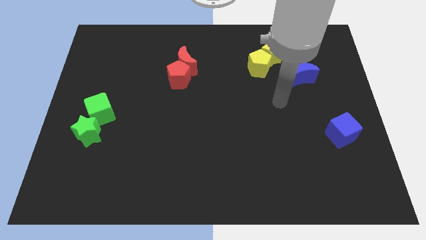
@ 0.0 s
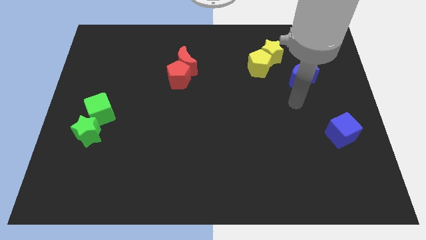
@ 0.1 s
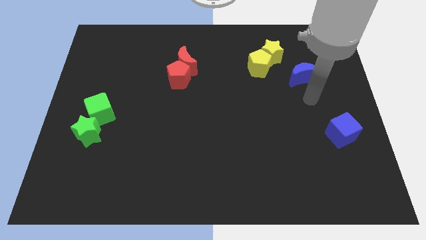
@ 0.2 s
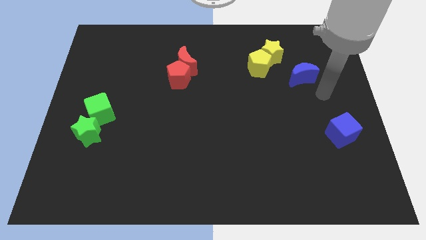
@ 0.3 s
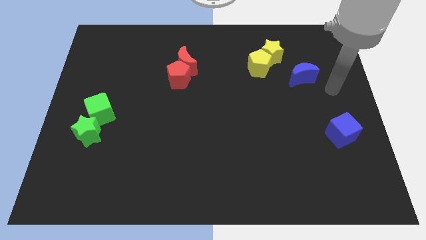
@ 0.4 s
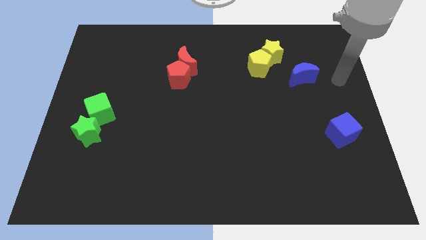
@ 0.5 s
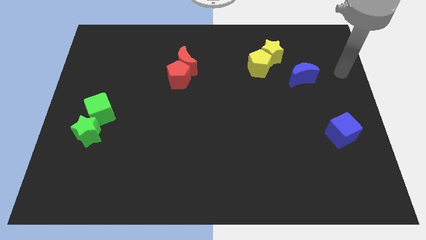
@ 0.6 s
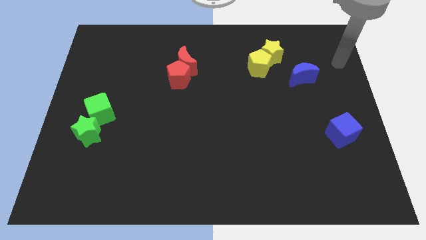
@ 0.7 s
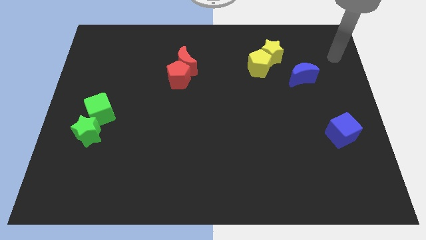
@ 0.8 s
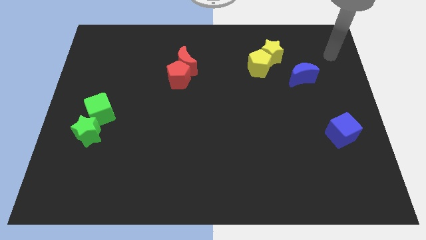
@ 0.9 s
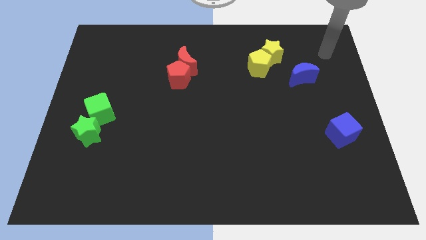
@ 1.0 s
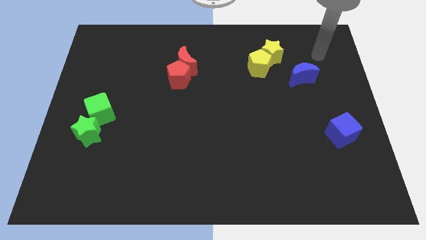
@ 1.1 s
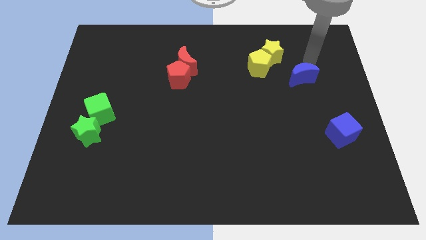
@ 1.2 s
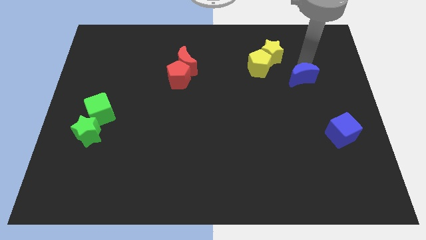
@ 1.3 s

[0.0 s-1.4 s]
move your arm close to the blue moon

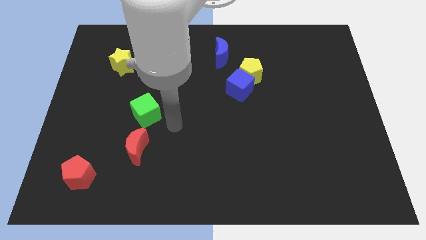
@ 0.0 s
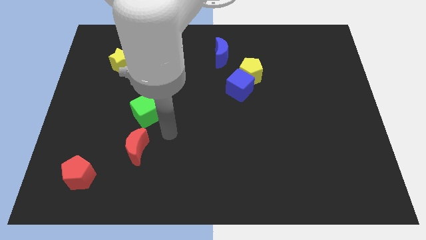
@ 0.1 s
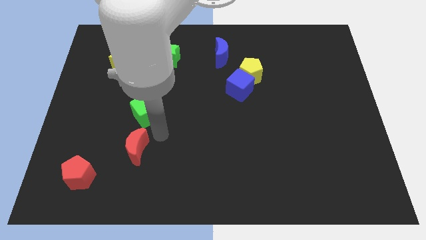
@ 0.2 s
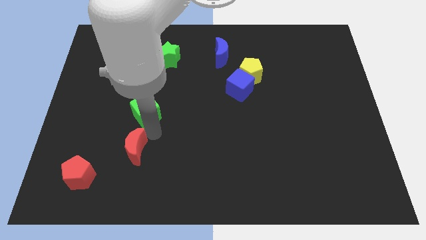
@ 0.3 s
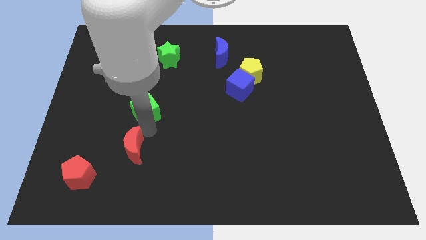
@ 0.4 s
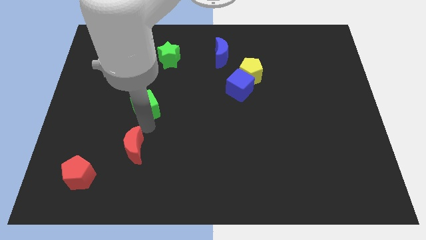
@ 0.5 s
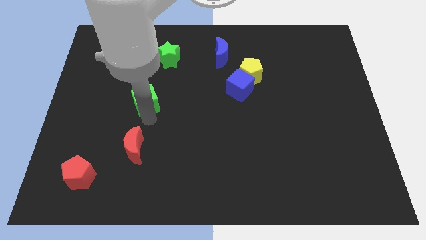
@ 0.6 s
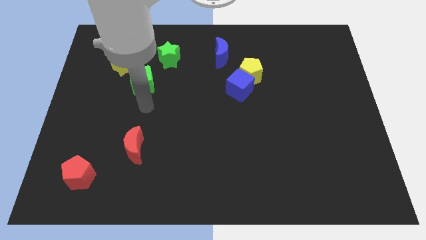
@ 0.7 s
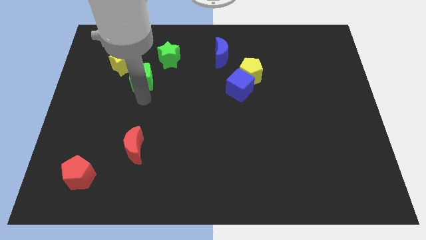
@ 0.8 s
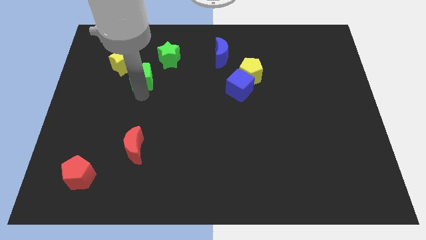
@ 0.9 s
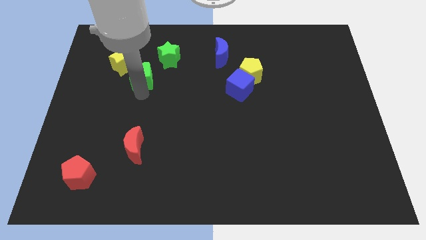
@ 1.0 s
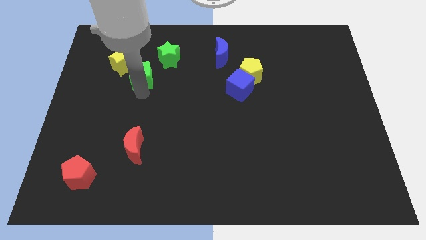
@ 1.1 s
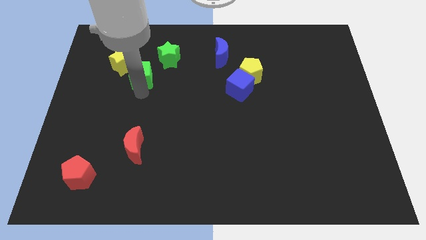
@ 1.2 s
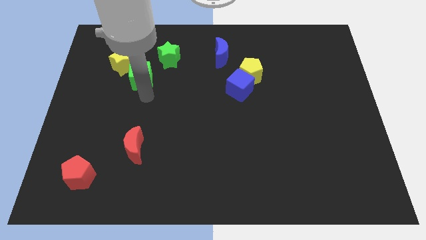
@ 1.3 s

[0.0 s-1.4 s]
place the green square down to the yellow star

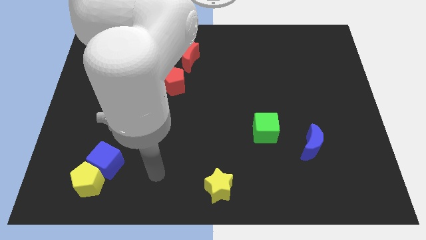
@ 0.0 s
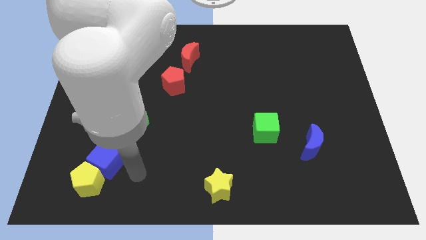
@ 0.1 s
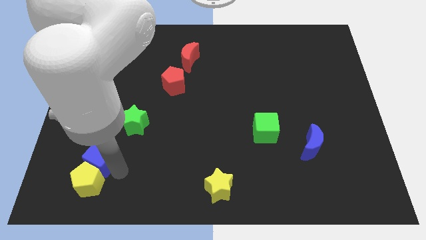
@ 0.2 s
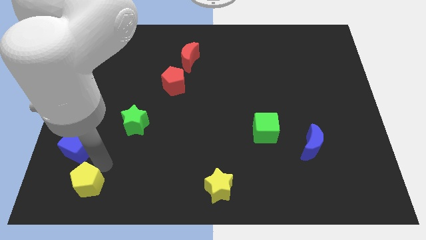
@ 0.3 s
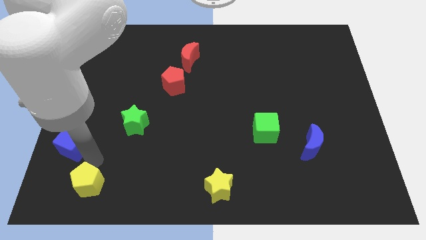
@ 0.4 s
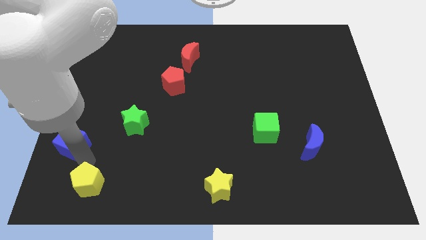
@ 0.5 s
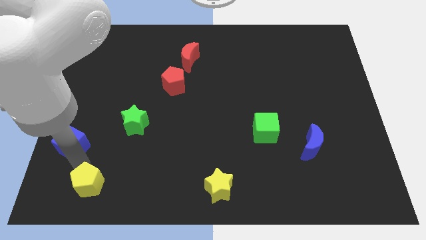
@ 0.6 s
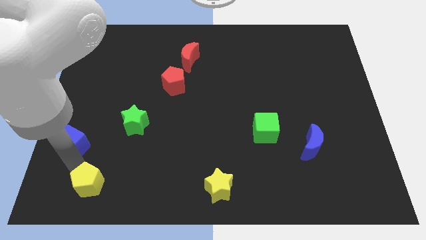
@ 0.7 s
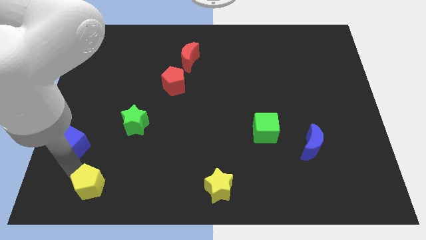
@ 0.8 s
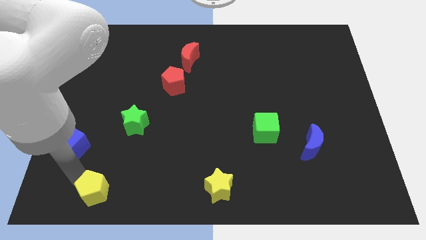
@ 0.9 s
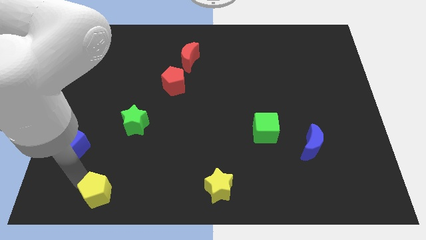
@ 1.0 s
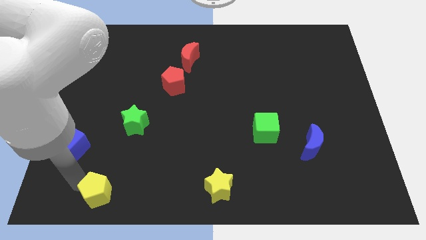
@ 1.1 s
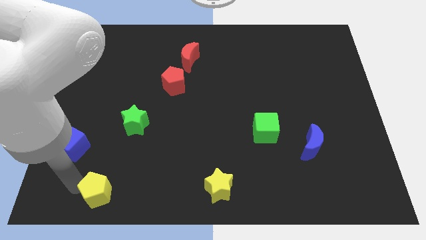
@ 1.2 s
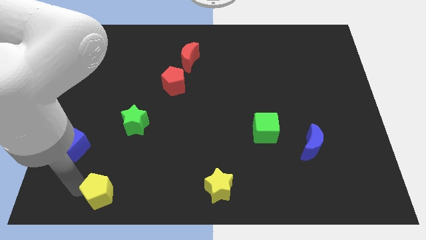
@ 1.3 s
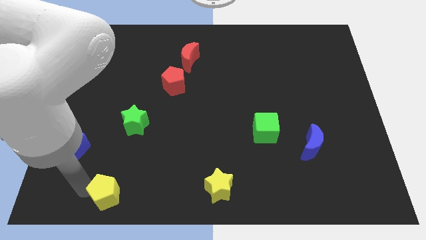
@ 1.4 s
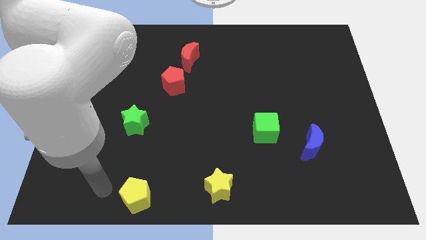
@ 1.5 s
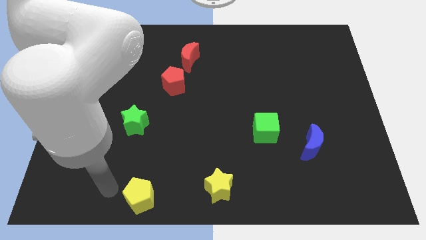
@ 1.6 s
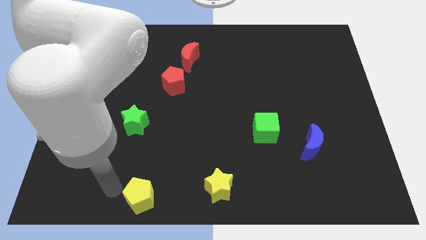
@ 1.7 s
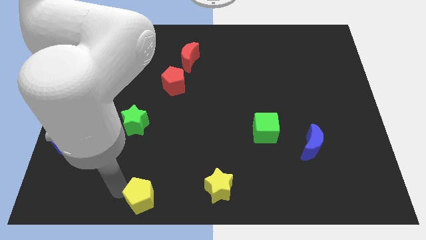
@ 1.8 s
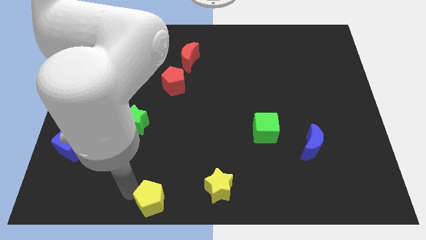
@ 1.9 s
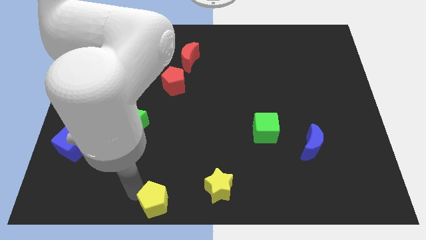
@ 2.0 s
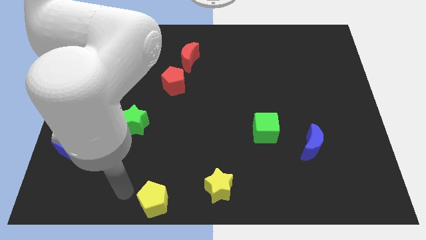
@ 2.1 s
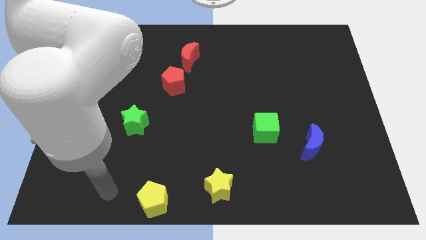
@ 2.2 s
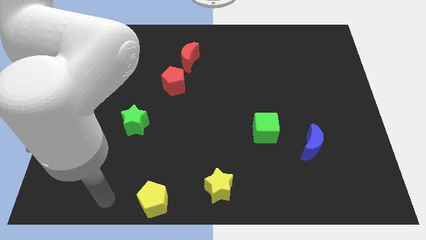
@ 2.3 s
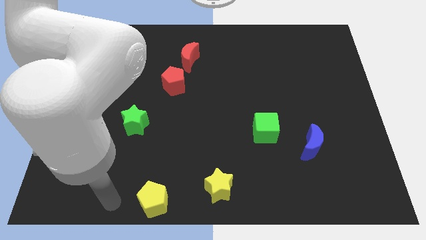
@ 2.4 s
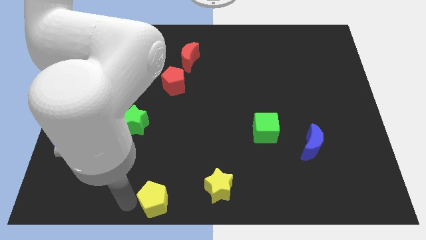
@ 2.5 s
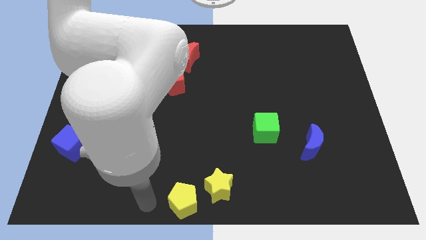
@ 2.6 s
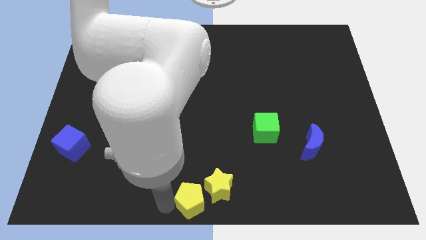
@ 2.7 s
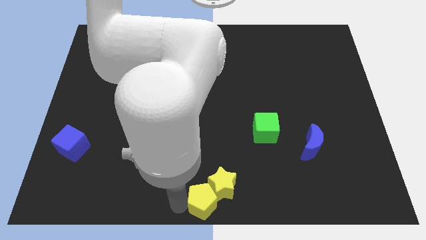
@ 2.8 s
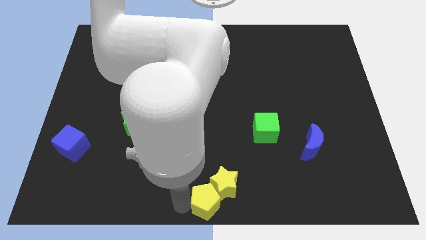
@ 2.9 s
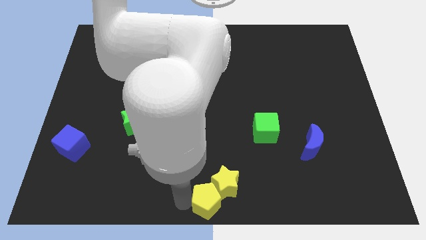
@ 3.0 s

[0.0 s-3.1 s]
push the yellow blocks together at the bottom center of the board

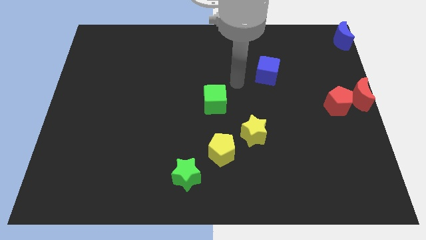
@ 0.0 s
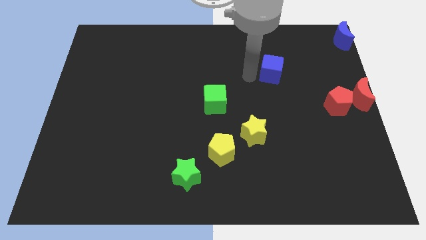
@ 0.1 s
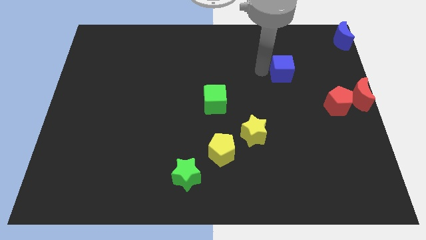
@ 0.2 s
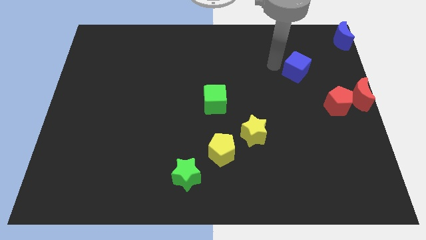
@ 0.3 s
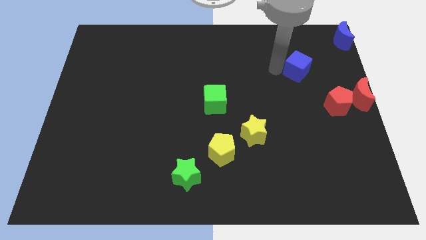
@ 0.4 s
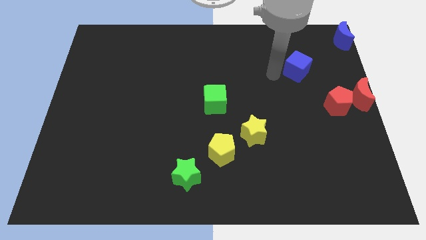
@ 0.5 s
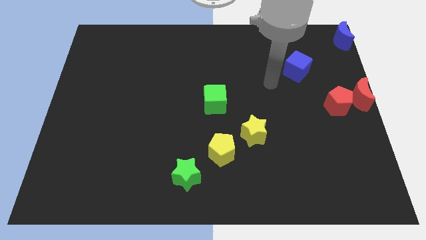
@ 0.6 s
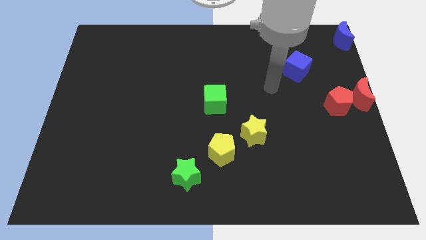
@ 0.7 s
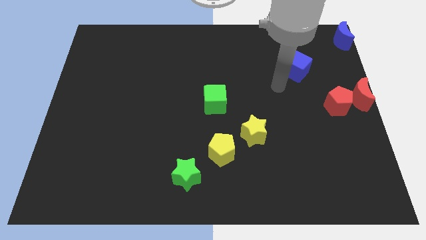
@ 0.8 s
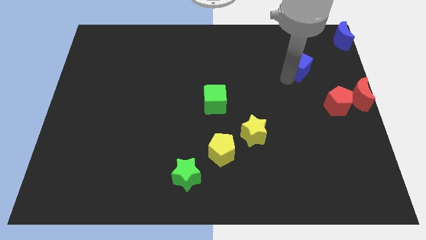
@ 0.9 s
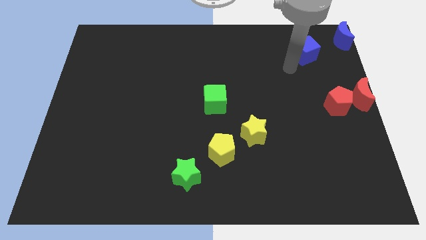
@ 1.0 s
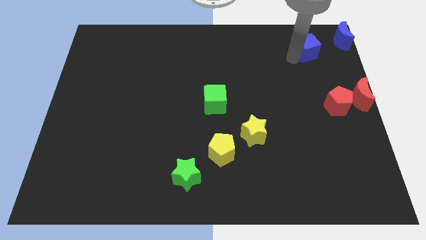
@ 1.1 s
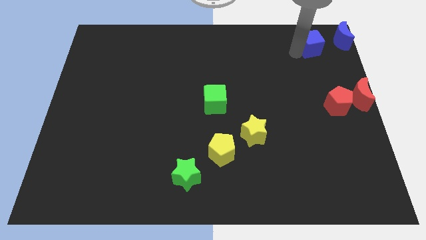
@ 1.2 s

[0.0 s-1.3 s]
move the blue cube towards the blue crescent

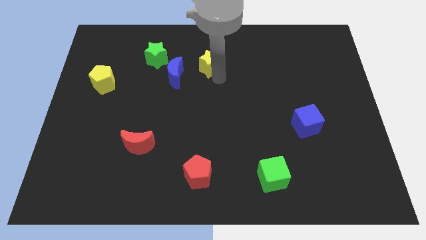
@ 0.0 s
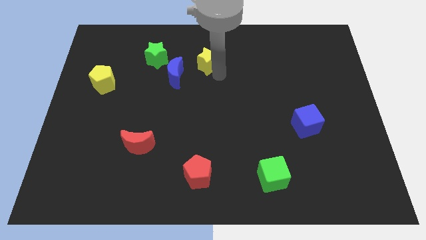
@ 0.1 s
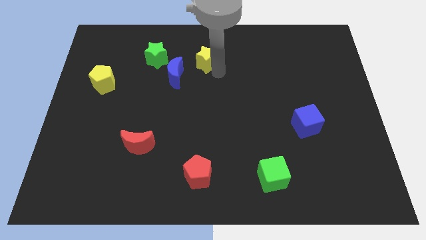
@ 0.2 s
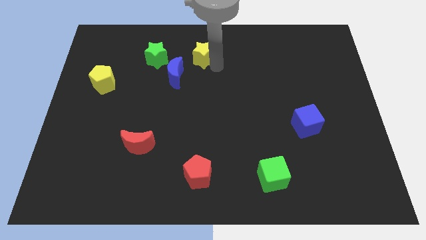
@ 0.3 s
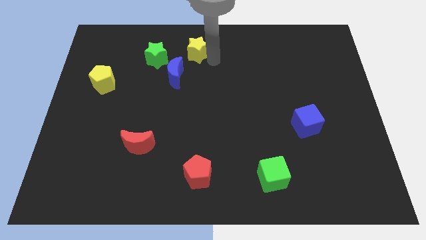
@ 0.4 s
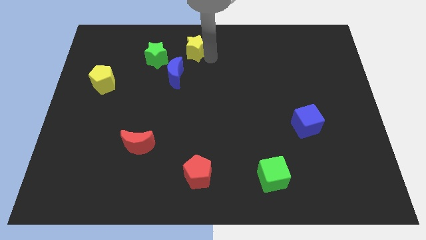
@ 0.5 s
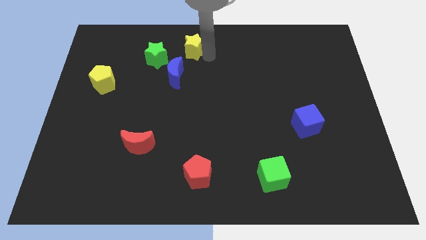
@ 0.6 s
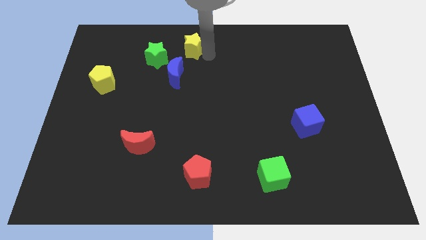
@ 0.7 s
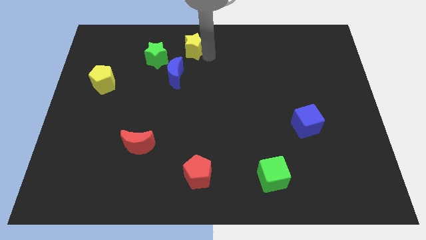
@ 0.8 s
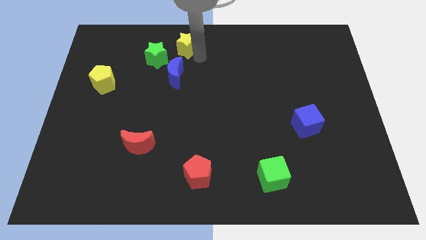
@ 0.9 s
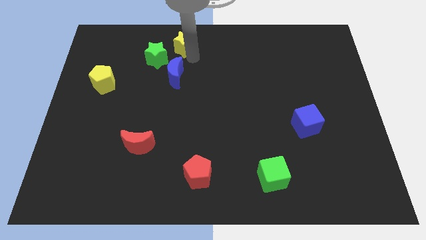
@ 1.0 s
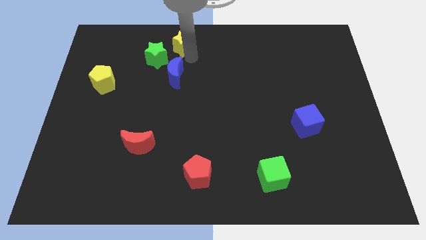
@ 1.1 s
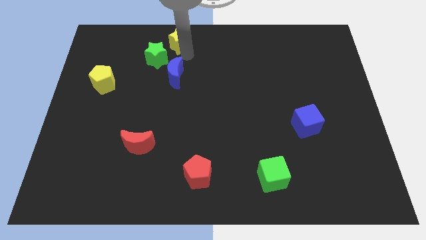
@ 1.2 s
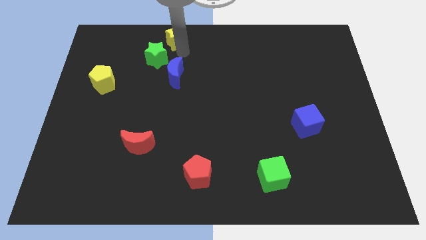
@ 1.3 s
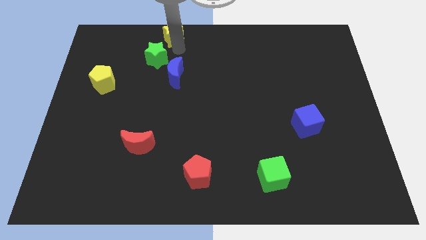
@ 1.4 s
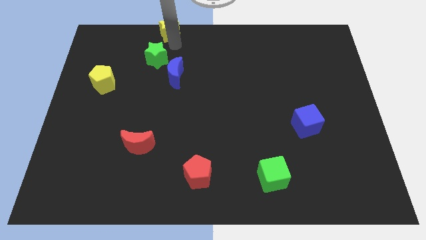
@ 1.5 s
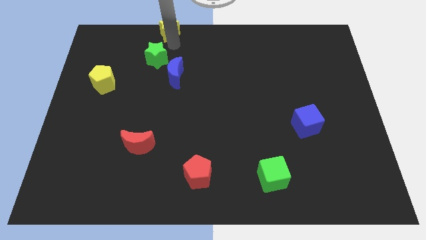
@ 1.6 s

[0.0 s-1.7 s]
place the yellow star slightly upwards

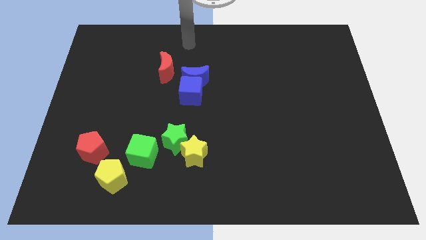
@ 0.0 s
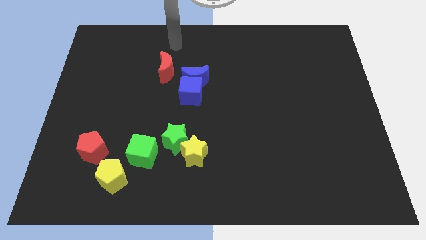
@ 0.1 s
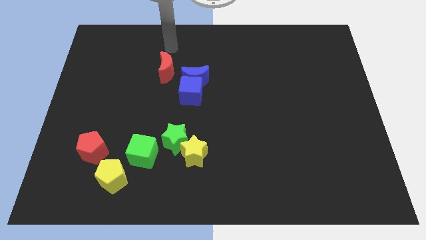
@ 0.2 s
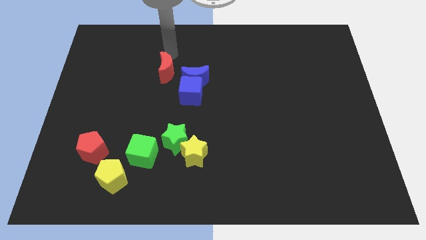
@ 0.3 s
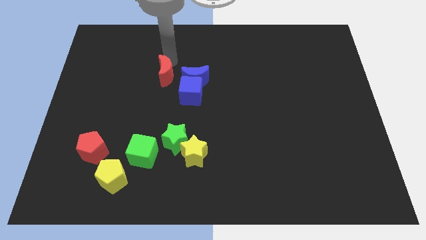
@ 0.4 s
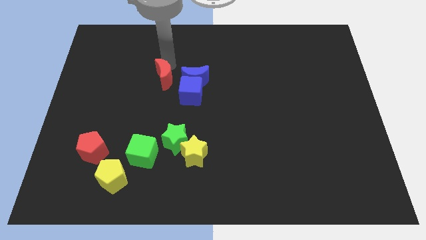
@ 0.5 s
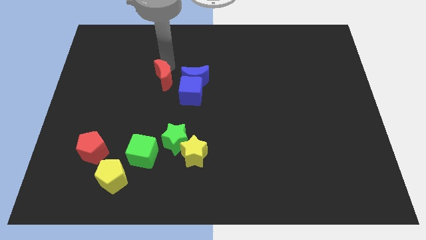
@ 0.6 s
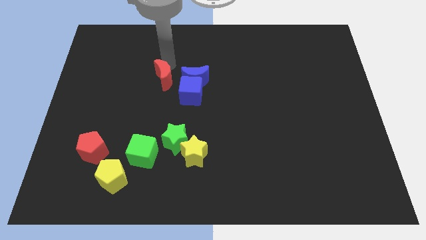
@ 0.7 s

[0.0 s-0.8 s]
push the red crescent to the left of the blue crescent
